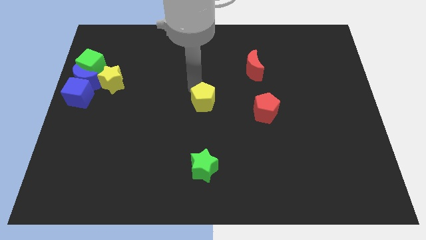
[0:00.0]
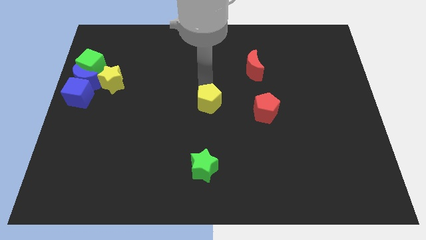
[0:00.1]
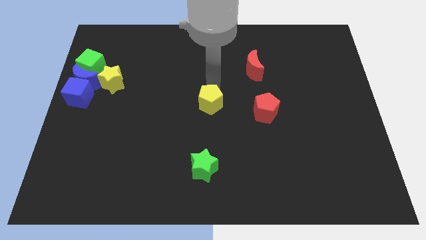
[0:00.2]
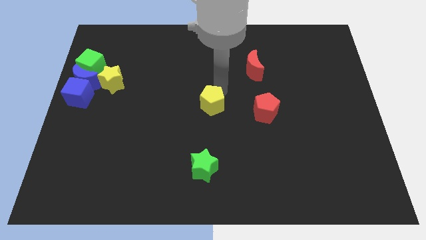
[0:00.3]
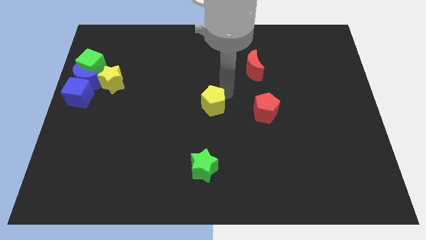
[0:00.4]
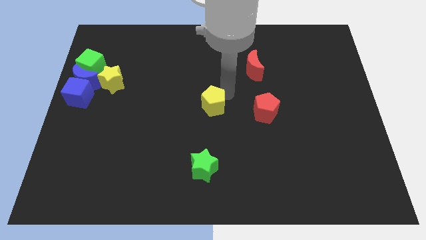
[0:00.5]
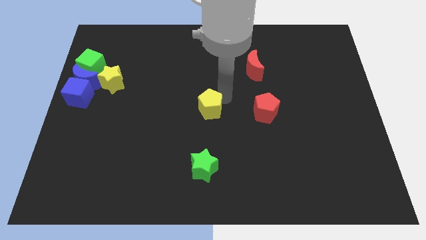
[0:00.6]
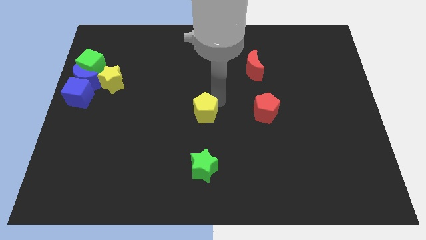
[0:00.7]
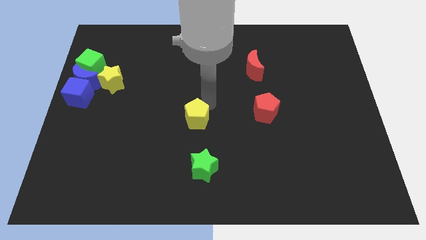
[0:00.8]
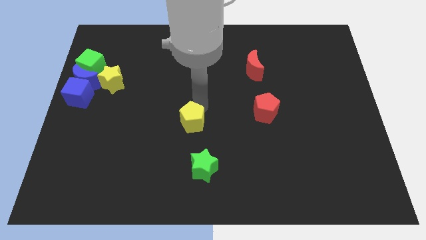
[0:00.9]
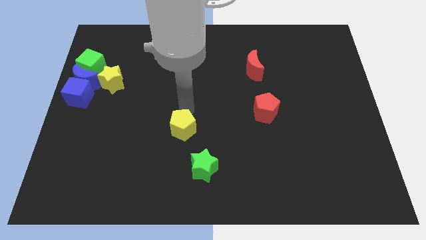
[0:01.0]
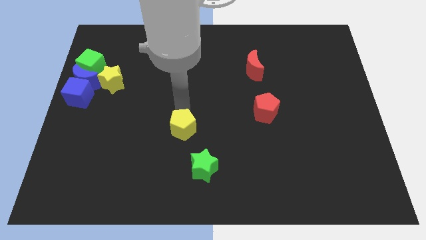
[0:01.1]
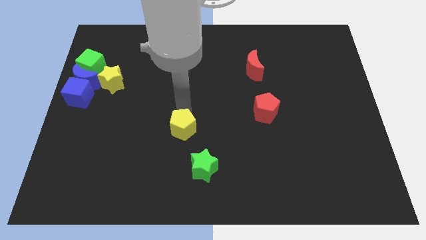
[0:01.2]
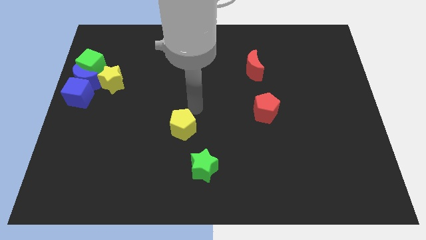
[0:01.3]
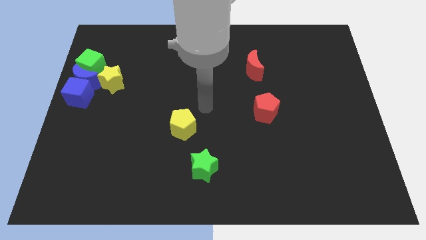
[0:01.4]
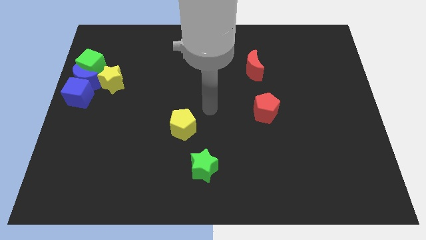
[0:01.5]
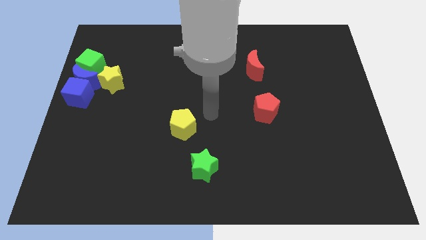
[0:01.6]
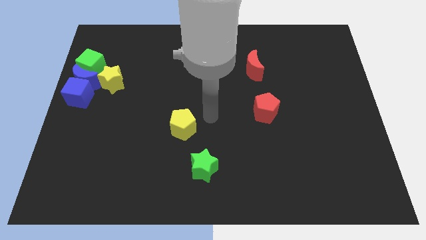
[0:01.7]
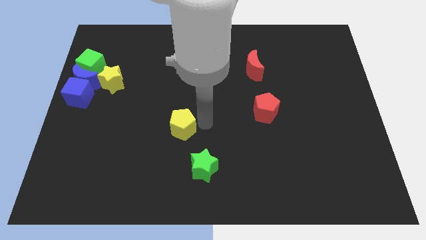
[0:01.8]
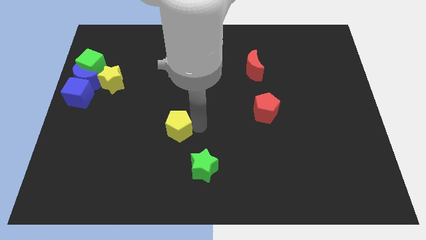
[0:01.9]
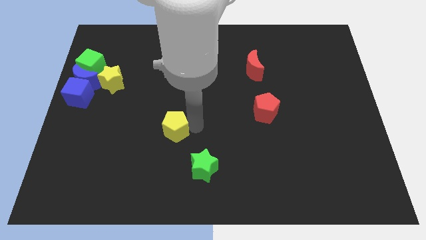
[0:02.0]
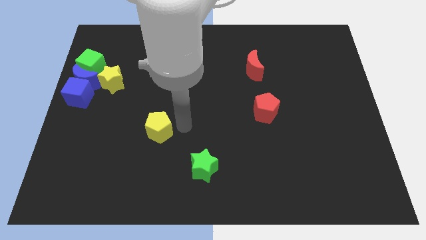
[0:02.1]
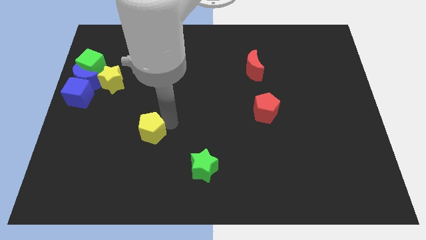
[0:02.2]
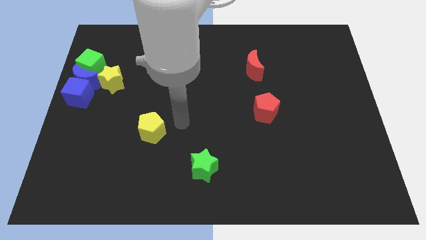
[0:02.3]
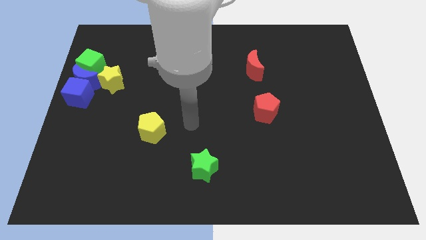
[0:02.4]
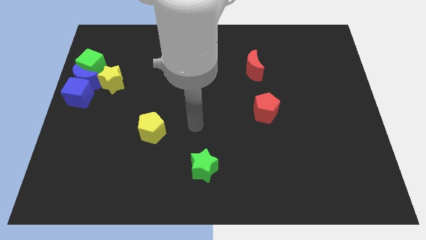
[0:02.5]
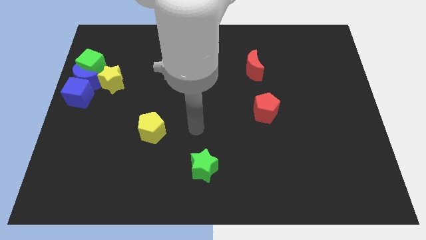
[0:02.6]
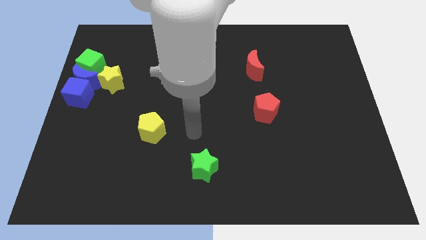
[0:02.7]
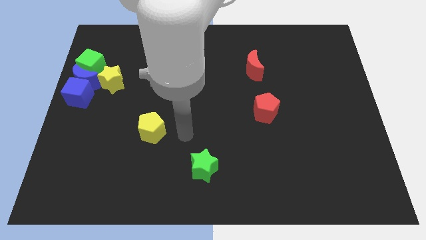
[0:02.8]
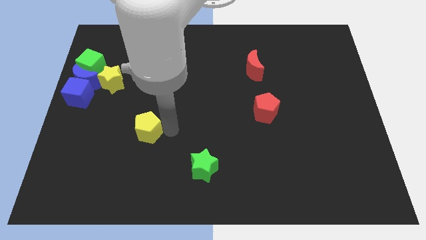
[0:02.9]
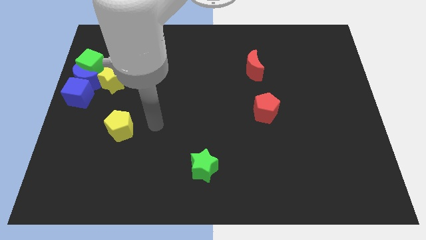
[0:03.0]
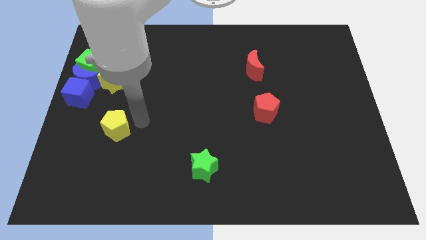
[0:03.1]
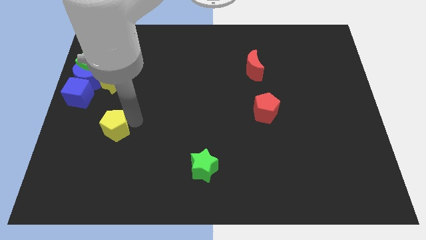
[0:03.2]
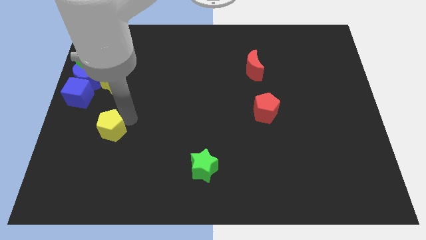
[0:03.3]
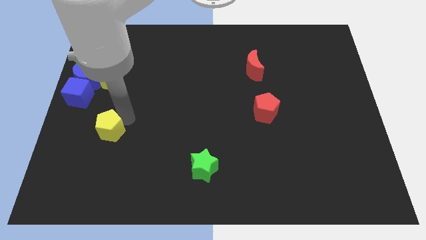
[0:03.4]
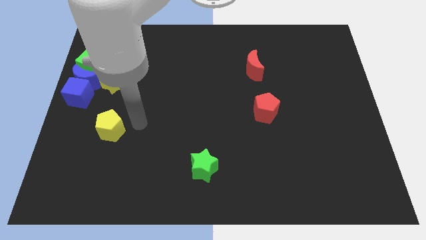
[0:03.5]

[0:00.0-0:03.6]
place the yellow pentagon diagonal to the blue cube

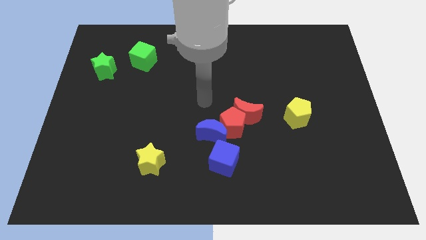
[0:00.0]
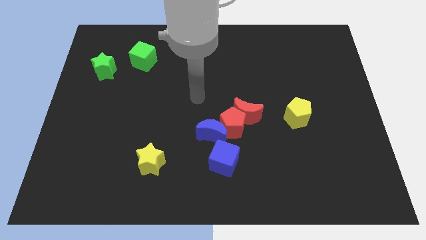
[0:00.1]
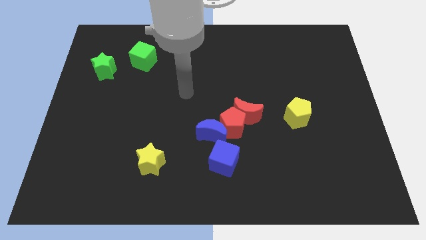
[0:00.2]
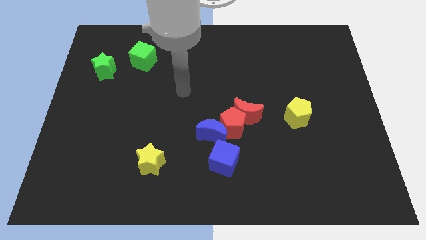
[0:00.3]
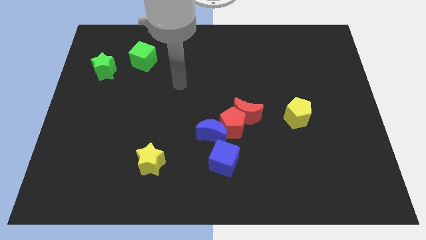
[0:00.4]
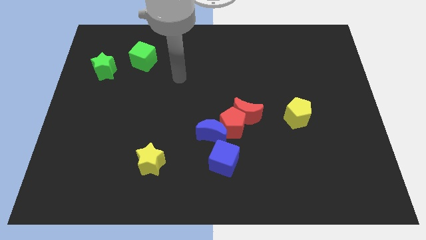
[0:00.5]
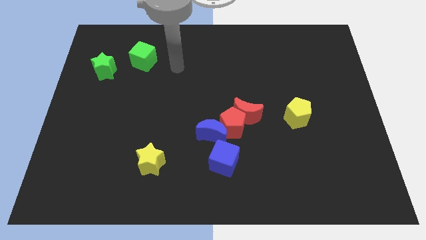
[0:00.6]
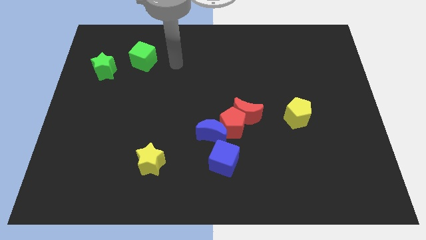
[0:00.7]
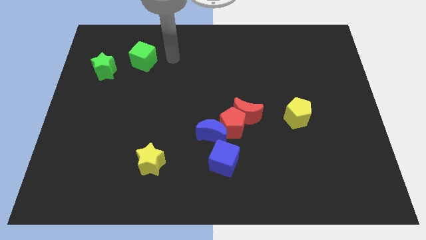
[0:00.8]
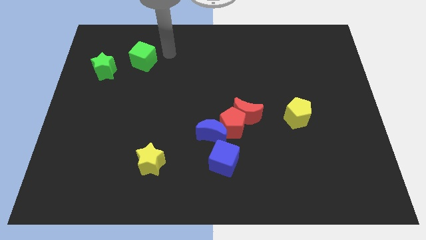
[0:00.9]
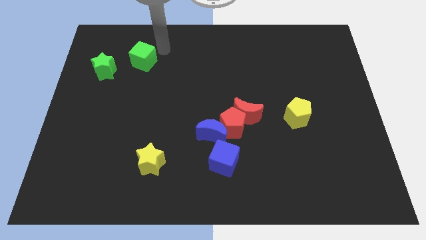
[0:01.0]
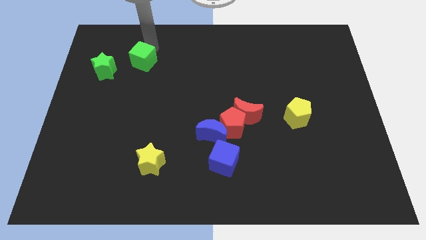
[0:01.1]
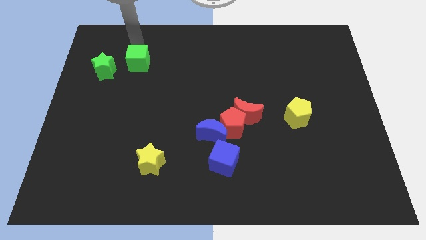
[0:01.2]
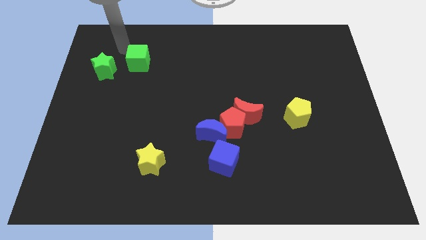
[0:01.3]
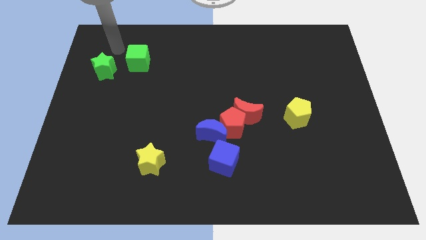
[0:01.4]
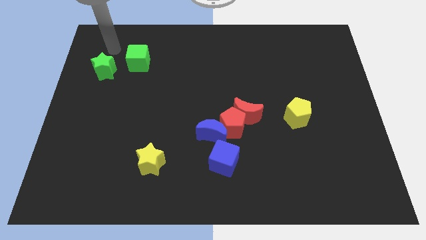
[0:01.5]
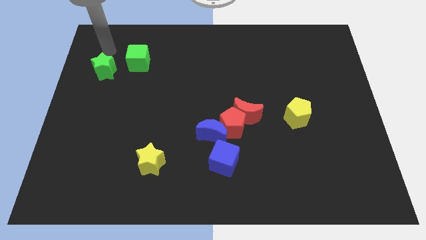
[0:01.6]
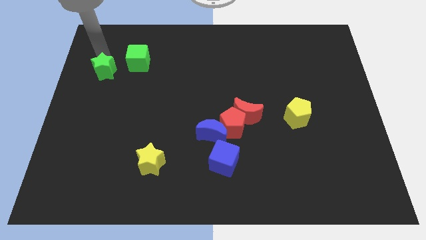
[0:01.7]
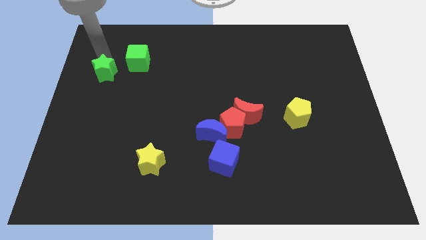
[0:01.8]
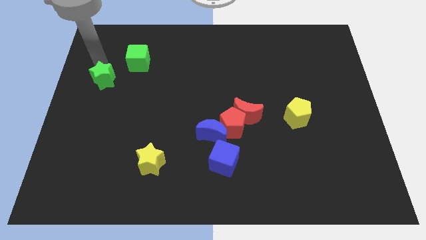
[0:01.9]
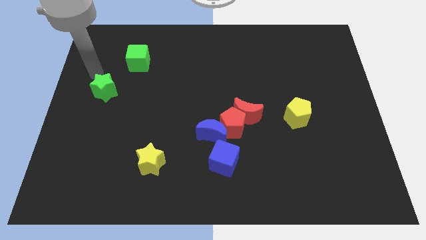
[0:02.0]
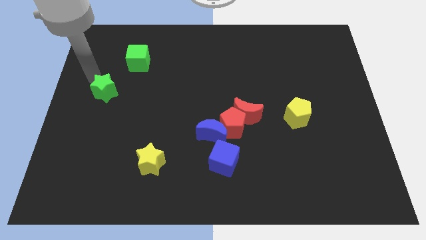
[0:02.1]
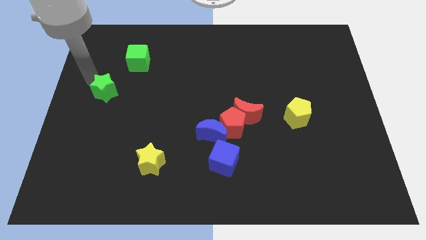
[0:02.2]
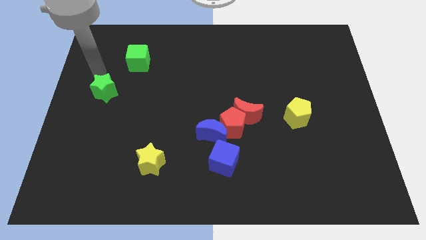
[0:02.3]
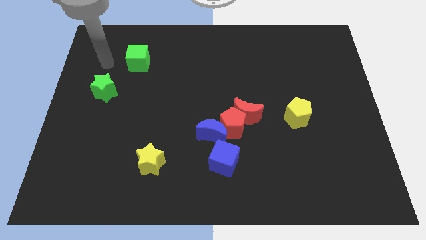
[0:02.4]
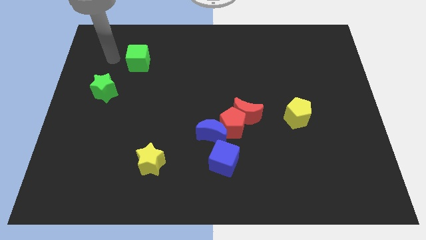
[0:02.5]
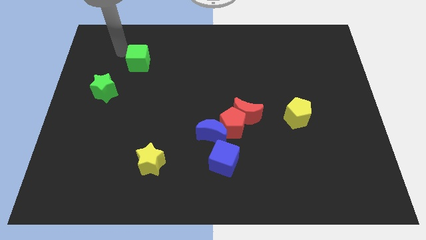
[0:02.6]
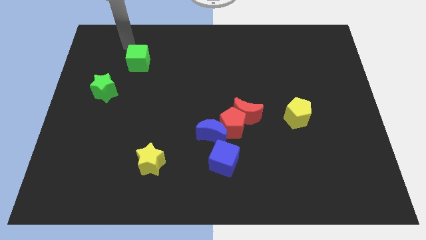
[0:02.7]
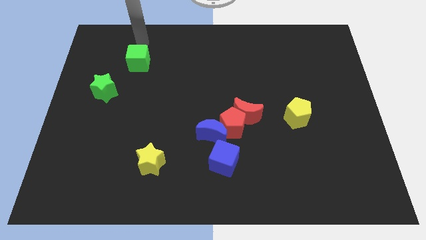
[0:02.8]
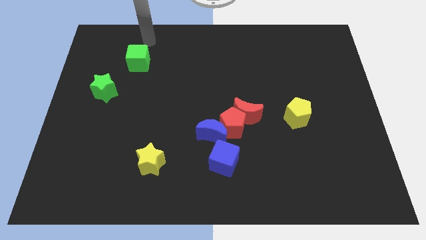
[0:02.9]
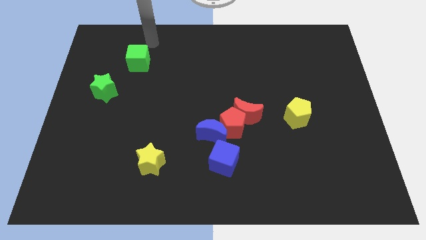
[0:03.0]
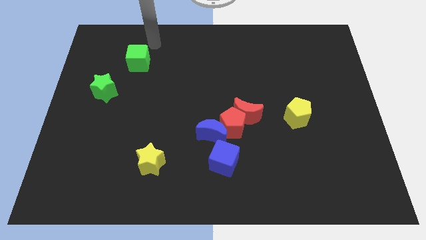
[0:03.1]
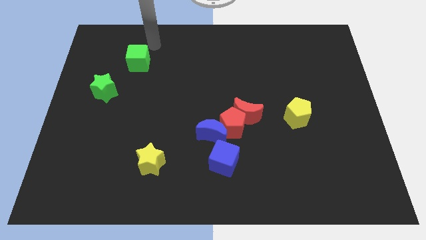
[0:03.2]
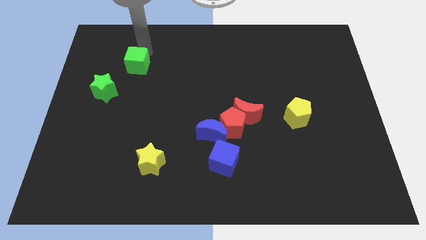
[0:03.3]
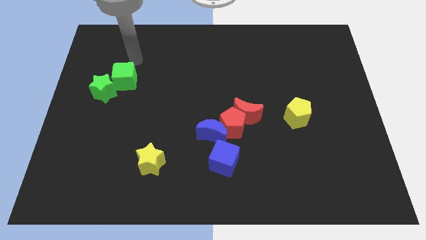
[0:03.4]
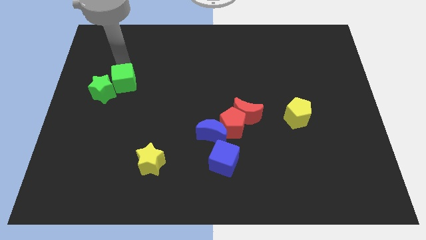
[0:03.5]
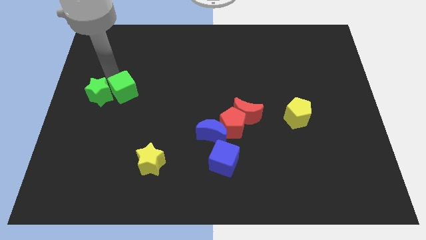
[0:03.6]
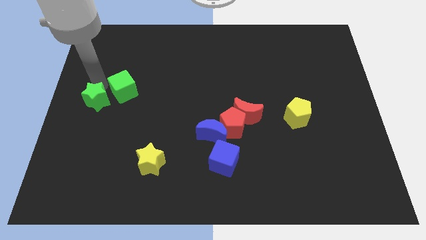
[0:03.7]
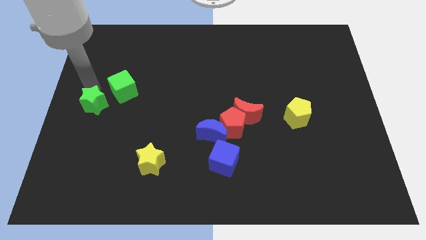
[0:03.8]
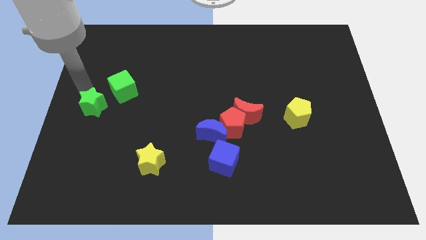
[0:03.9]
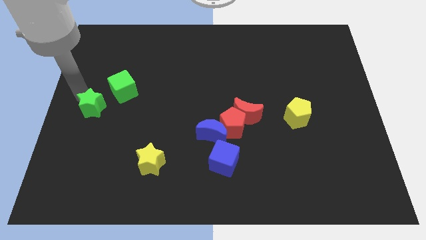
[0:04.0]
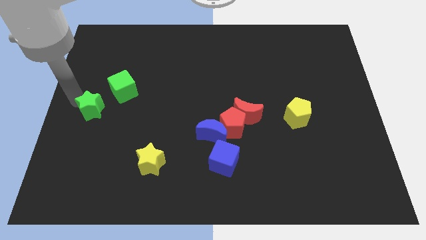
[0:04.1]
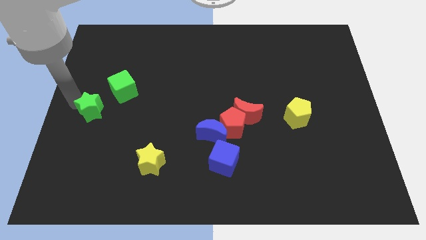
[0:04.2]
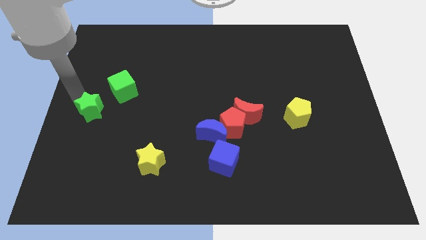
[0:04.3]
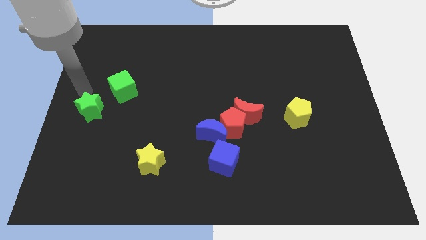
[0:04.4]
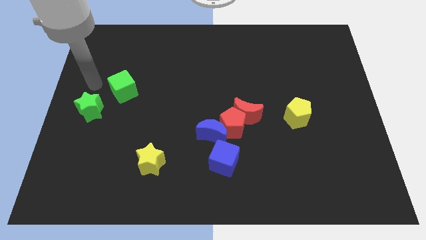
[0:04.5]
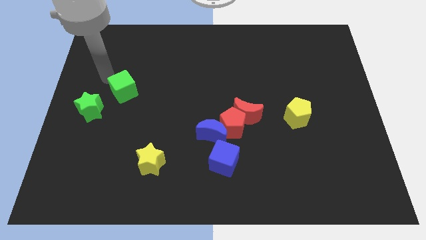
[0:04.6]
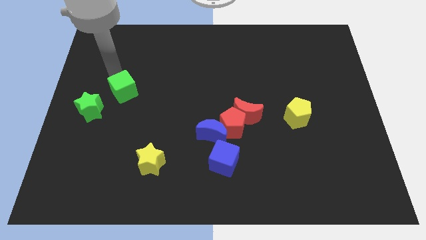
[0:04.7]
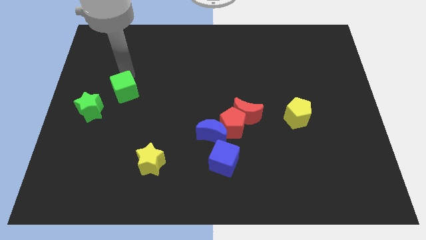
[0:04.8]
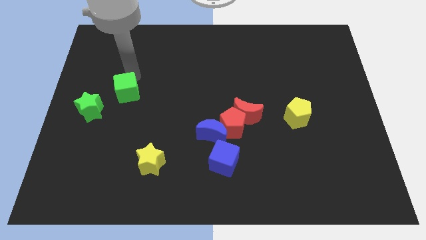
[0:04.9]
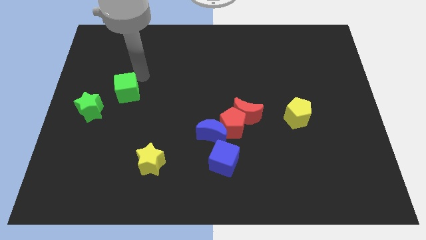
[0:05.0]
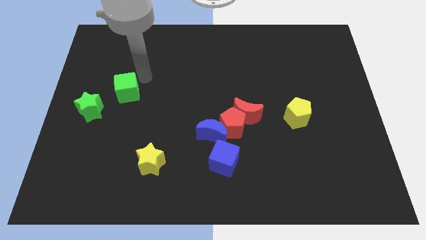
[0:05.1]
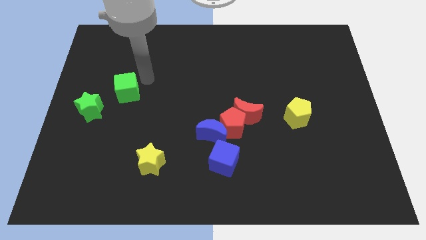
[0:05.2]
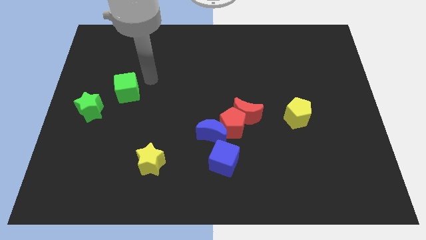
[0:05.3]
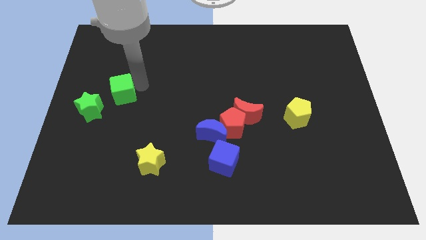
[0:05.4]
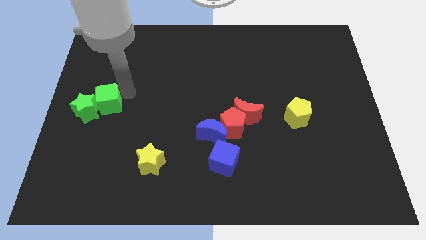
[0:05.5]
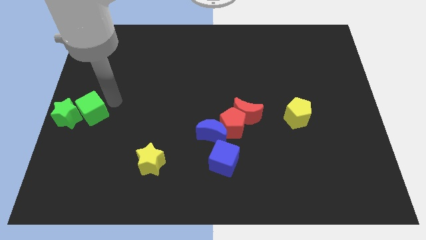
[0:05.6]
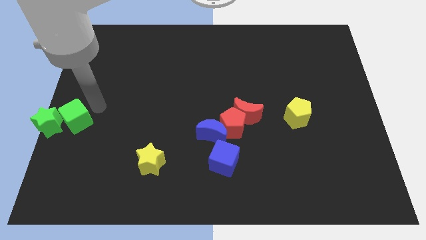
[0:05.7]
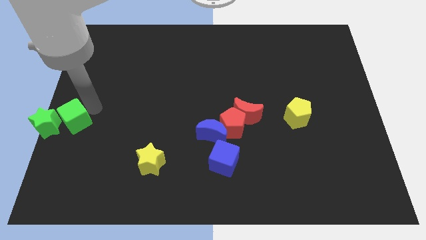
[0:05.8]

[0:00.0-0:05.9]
move both the green star and green cube at the center left
